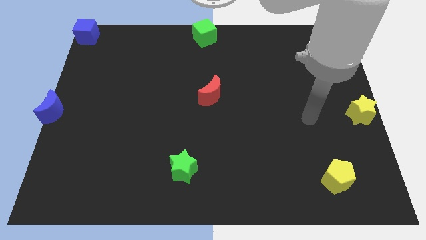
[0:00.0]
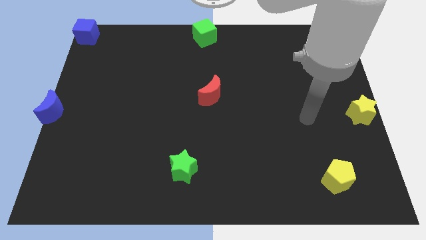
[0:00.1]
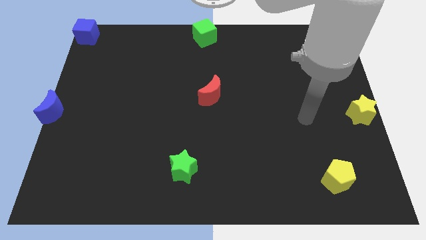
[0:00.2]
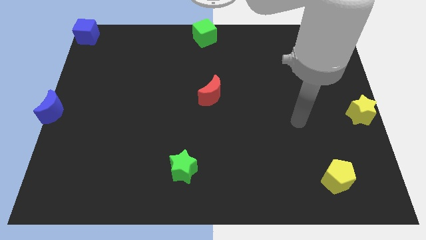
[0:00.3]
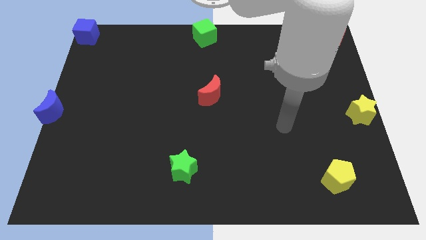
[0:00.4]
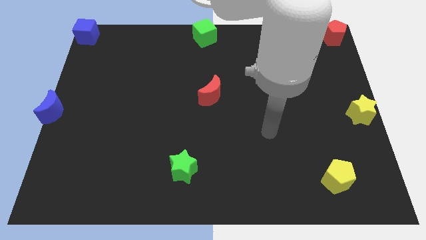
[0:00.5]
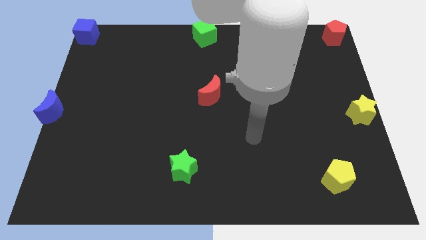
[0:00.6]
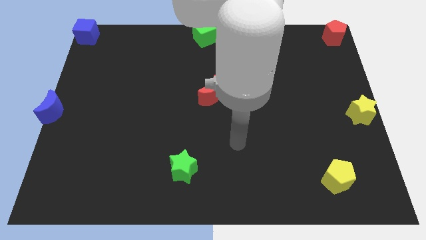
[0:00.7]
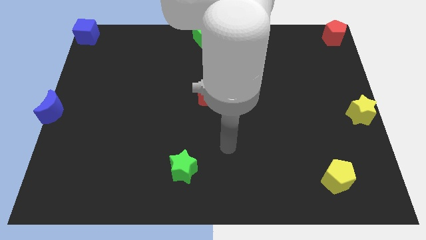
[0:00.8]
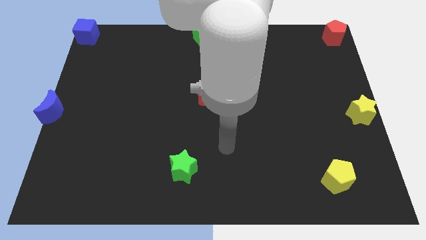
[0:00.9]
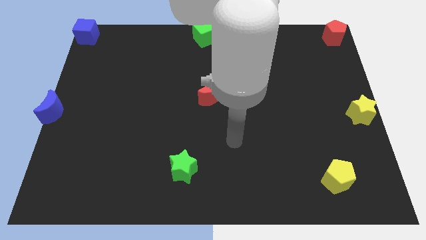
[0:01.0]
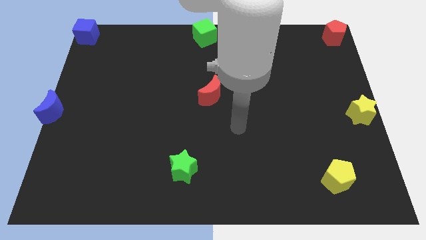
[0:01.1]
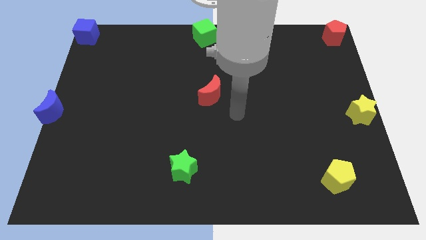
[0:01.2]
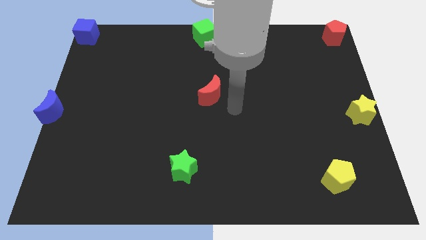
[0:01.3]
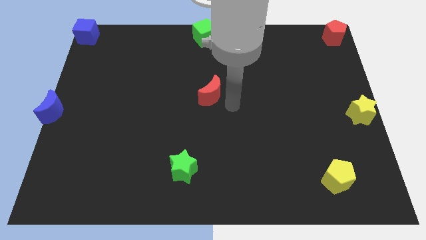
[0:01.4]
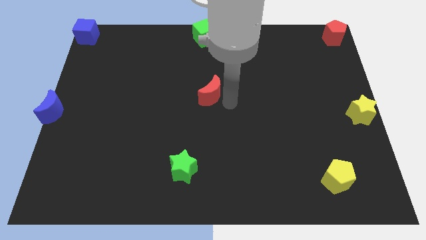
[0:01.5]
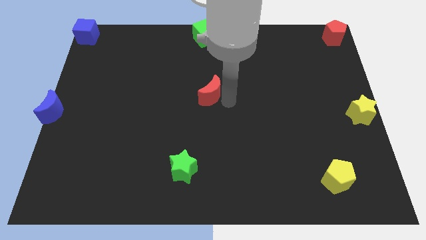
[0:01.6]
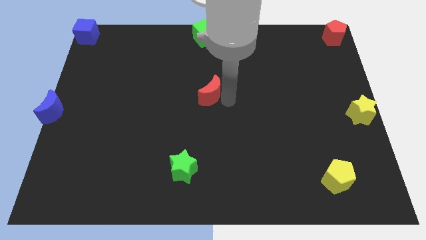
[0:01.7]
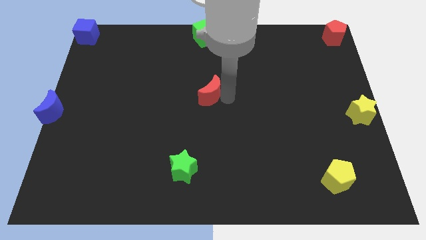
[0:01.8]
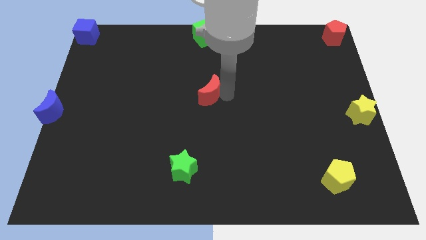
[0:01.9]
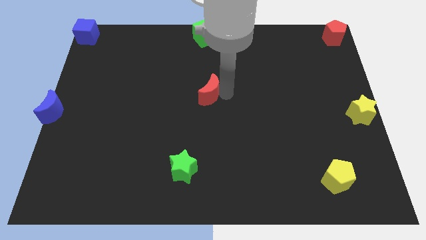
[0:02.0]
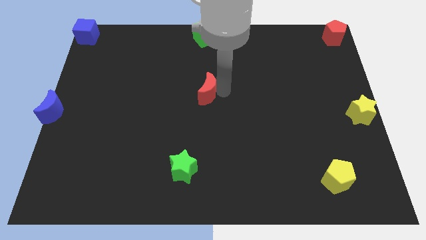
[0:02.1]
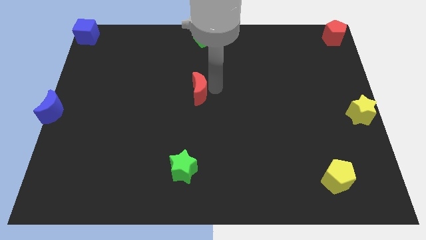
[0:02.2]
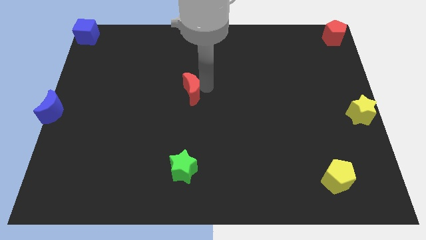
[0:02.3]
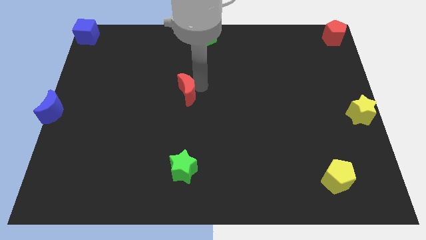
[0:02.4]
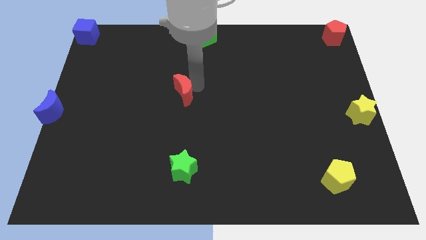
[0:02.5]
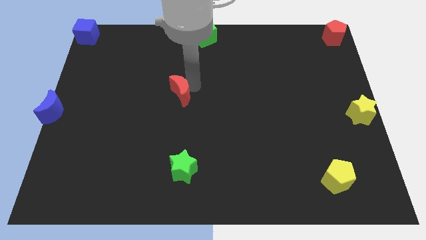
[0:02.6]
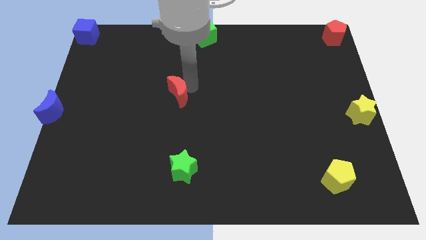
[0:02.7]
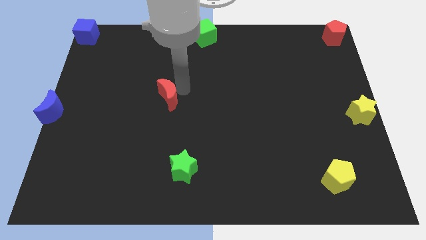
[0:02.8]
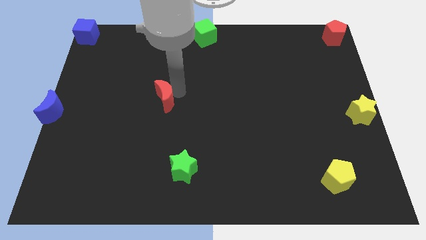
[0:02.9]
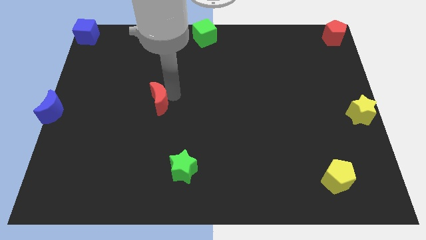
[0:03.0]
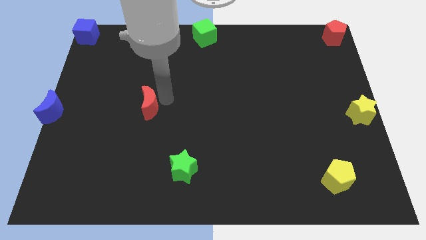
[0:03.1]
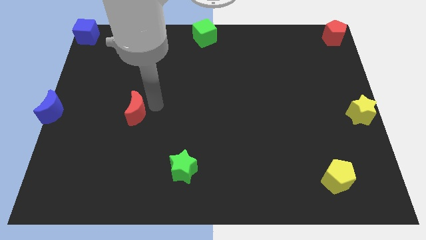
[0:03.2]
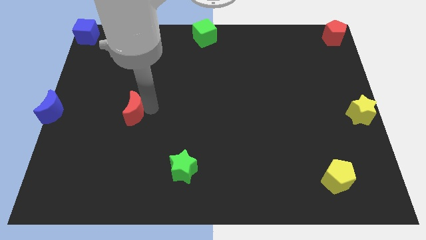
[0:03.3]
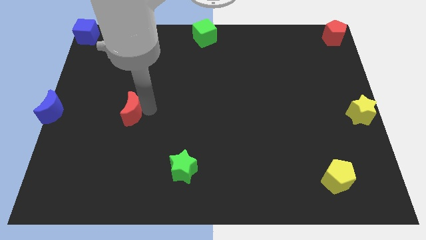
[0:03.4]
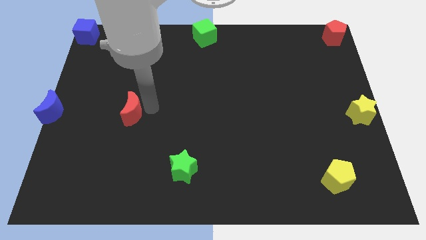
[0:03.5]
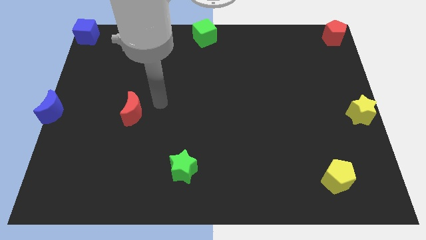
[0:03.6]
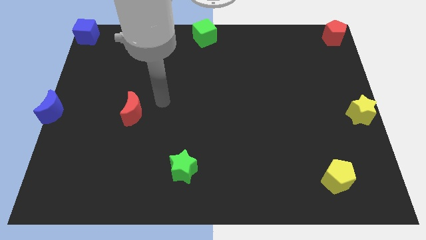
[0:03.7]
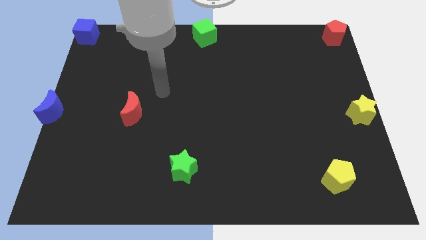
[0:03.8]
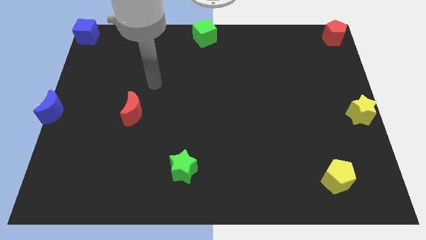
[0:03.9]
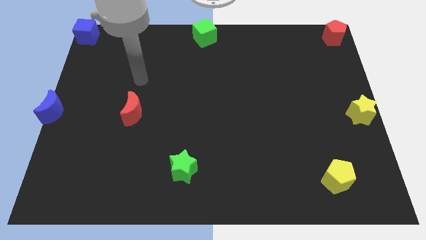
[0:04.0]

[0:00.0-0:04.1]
slide red crescent towards blue moon

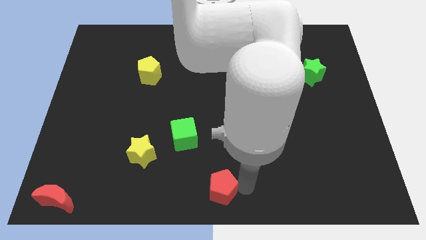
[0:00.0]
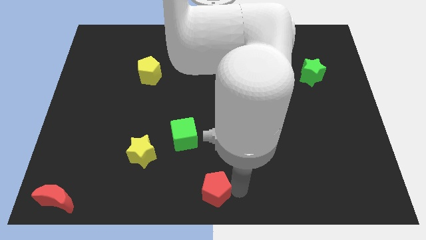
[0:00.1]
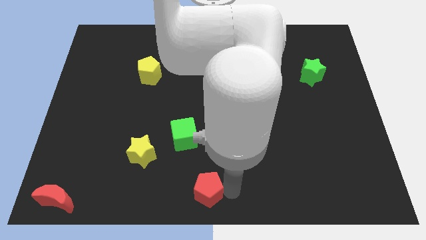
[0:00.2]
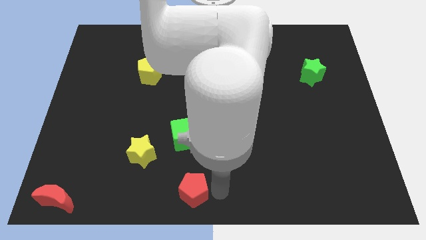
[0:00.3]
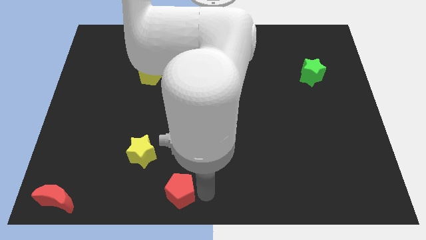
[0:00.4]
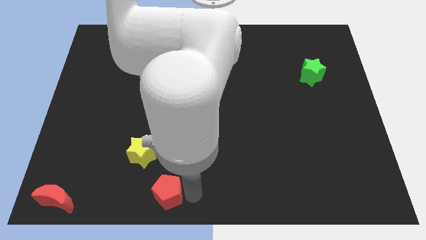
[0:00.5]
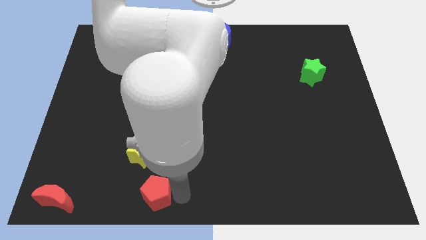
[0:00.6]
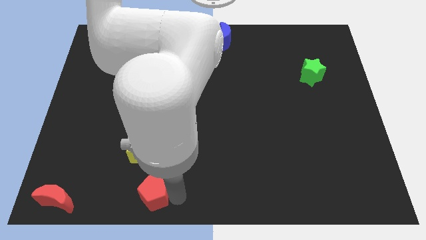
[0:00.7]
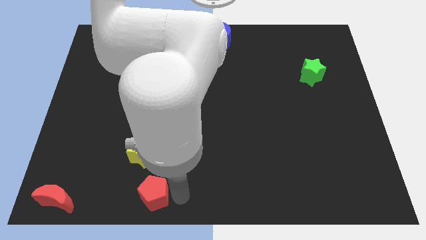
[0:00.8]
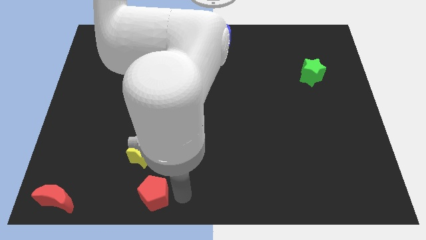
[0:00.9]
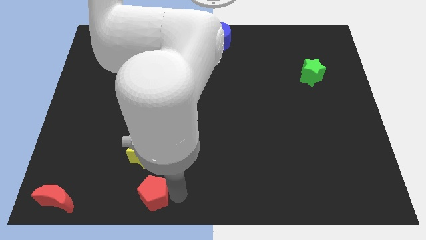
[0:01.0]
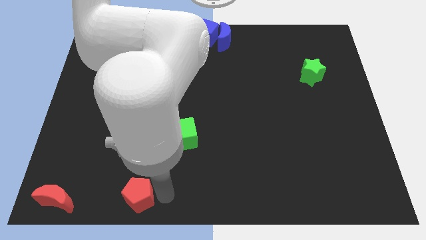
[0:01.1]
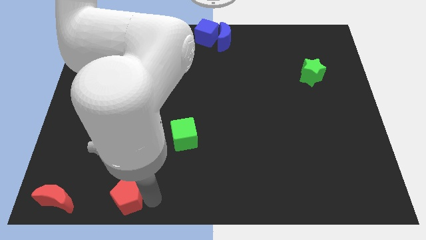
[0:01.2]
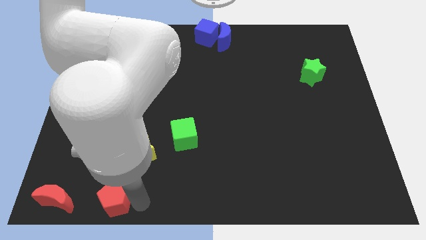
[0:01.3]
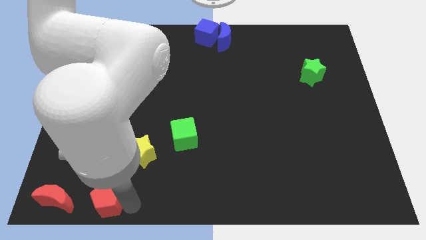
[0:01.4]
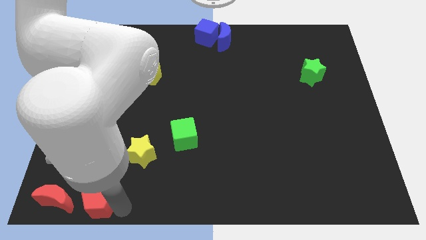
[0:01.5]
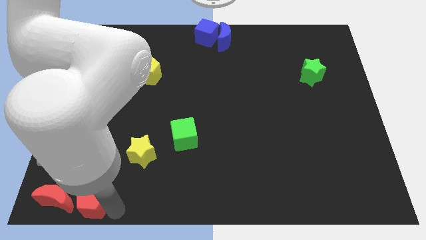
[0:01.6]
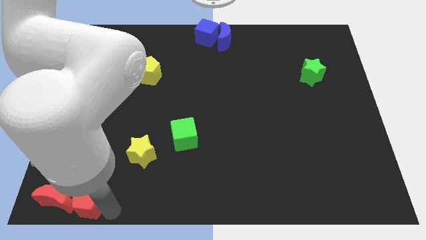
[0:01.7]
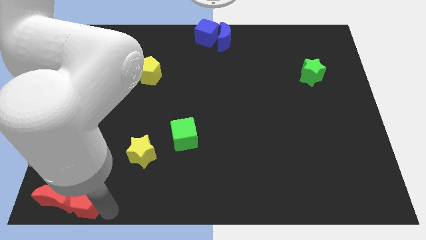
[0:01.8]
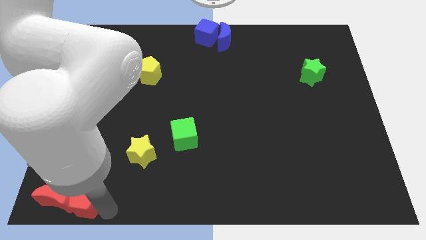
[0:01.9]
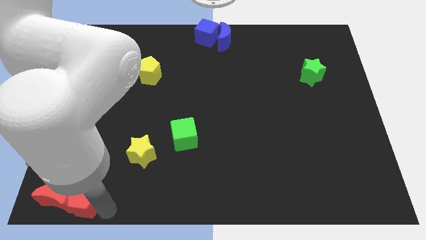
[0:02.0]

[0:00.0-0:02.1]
place the red pentagon to the right into the red moon

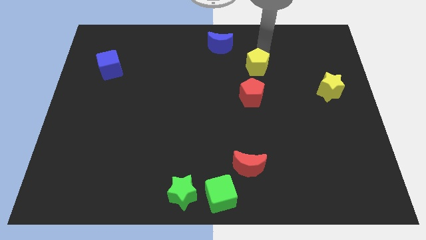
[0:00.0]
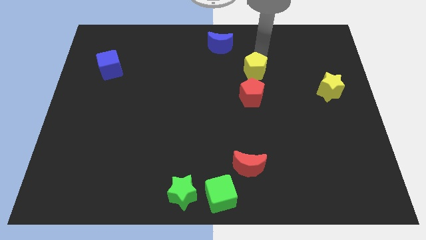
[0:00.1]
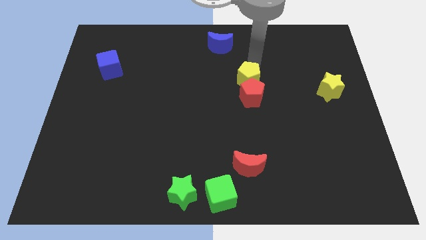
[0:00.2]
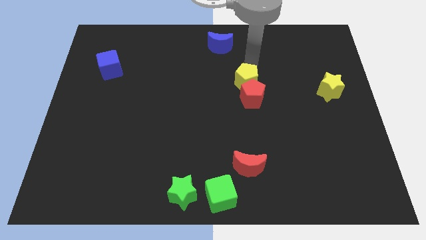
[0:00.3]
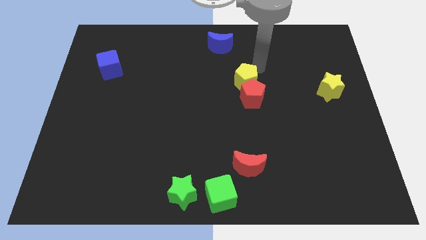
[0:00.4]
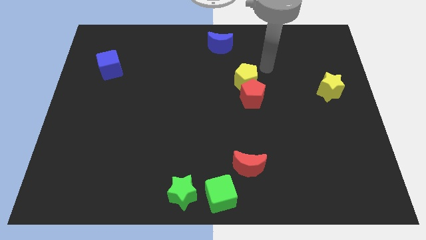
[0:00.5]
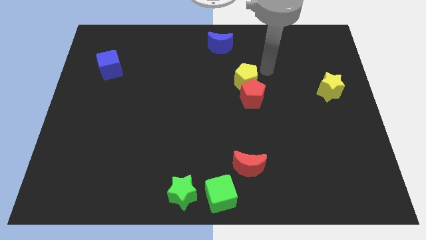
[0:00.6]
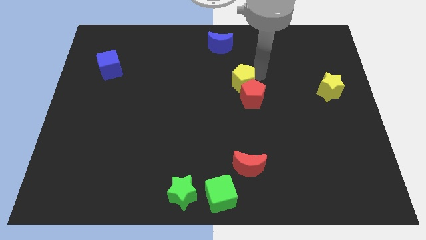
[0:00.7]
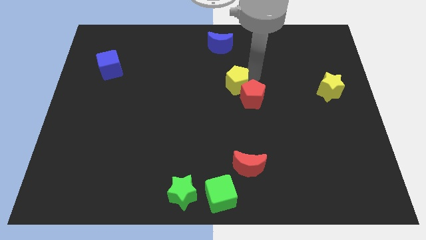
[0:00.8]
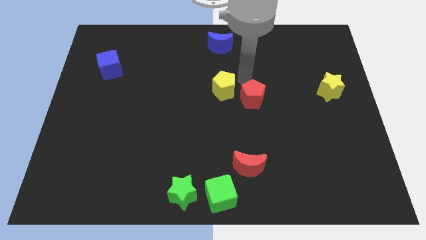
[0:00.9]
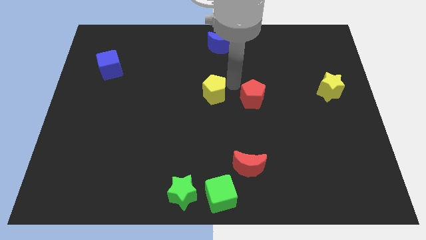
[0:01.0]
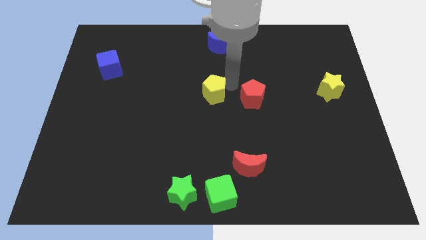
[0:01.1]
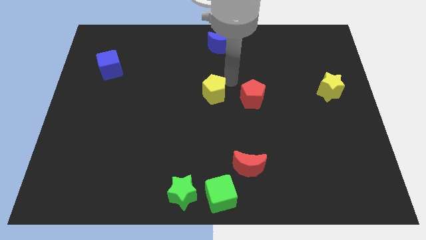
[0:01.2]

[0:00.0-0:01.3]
place yellow pentagon at center

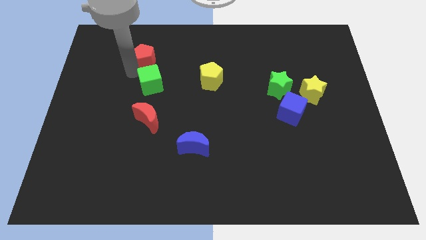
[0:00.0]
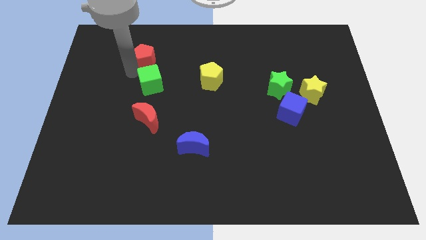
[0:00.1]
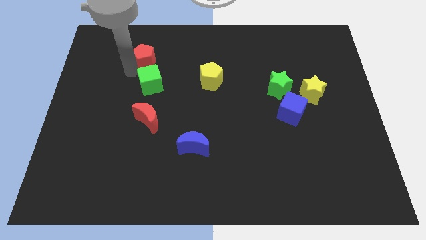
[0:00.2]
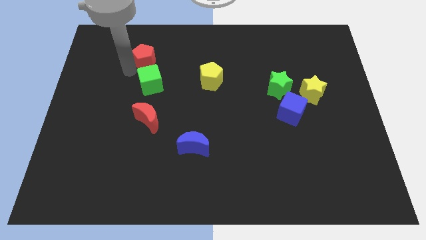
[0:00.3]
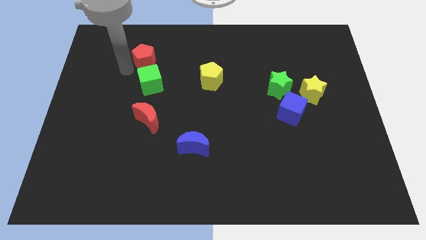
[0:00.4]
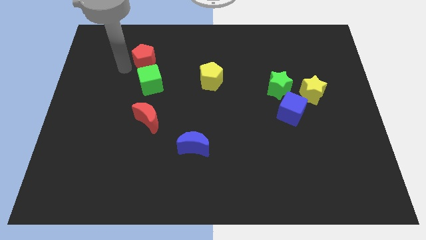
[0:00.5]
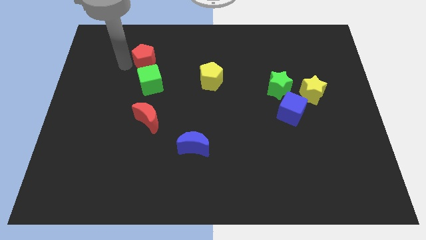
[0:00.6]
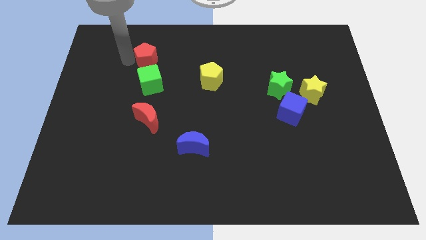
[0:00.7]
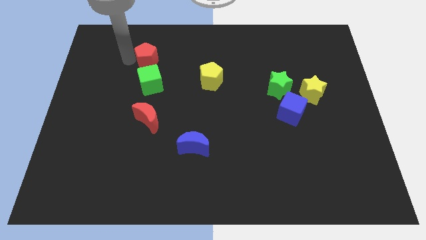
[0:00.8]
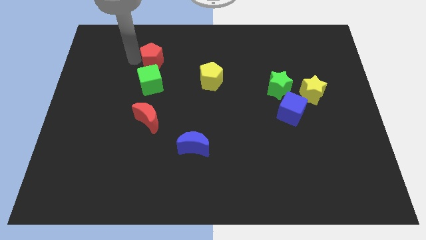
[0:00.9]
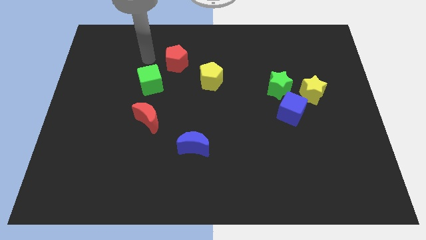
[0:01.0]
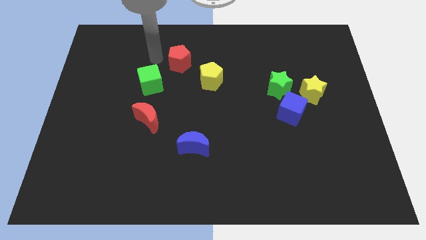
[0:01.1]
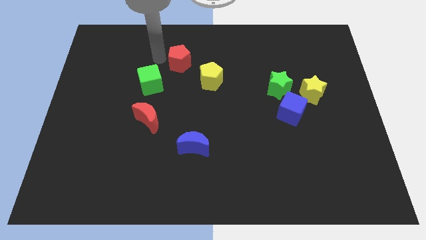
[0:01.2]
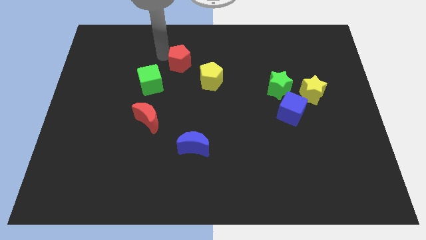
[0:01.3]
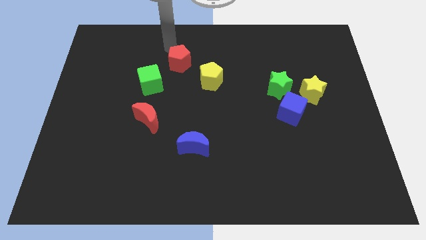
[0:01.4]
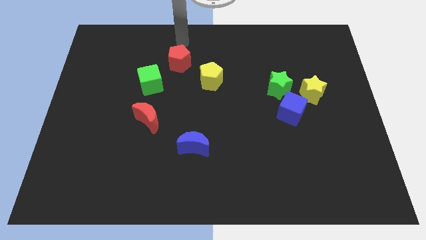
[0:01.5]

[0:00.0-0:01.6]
move red pentagon left above the yellow pentagon
